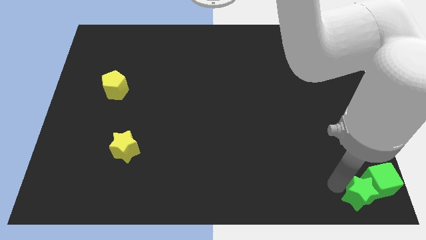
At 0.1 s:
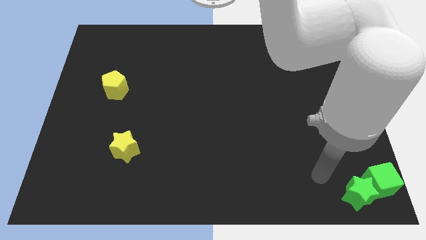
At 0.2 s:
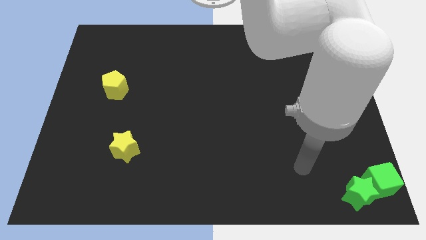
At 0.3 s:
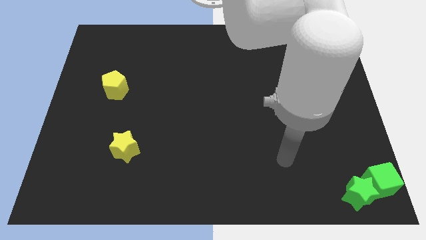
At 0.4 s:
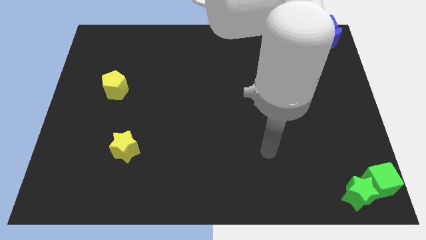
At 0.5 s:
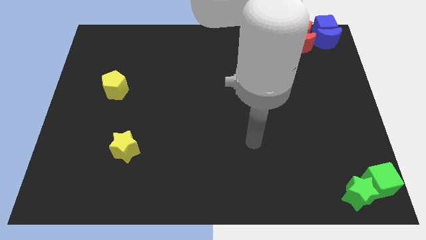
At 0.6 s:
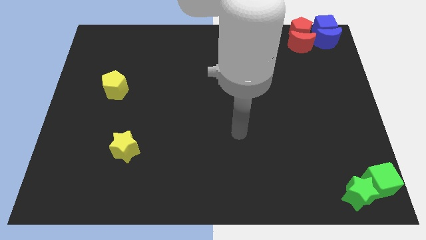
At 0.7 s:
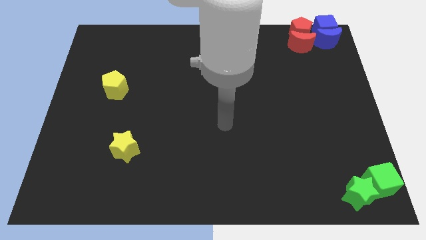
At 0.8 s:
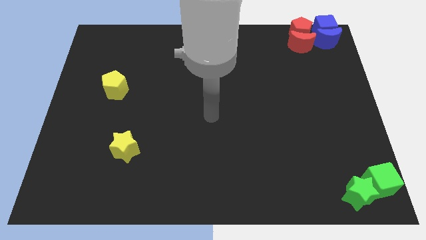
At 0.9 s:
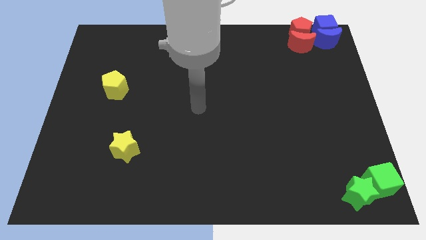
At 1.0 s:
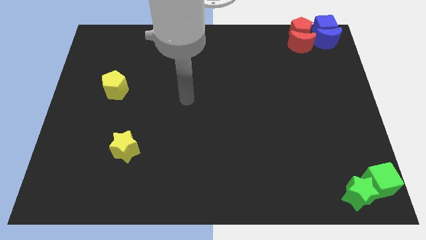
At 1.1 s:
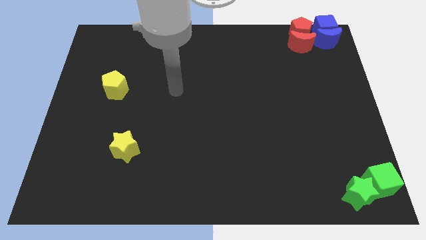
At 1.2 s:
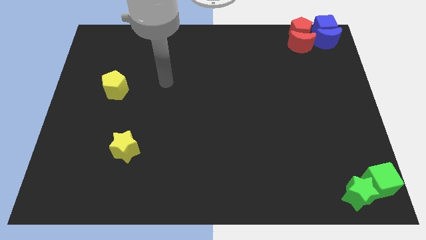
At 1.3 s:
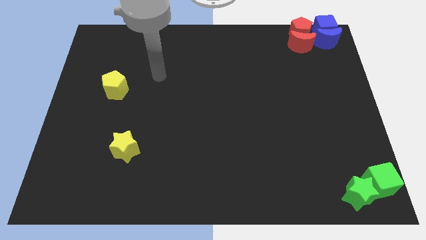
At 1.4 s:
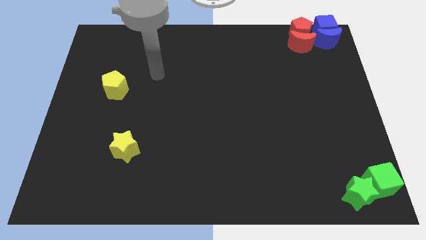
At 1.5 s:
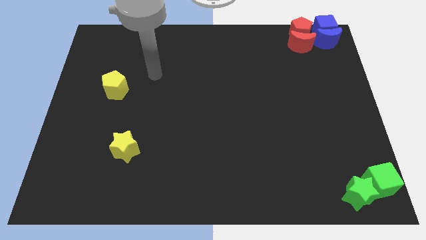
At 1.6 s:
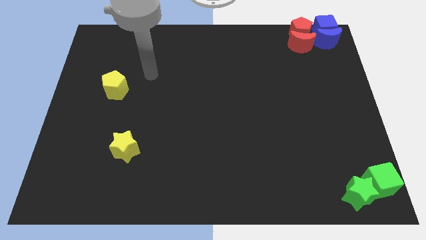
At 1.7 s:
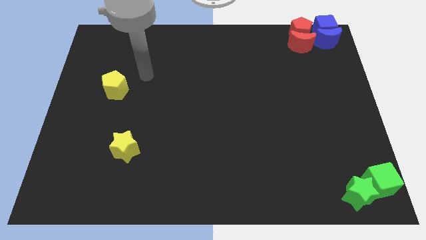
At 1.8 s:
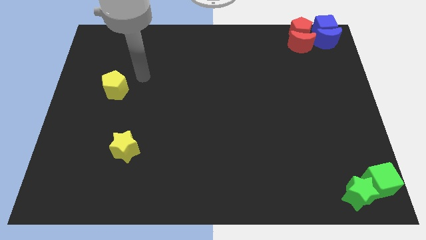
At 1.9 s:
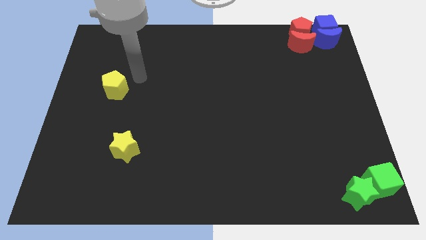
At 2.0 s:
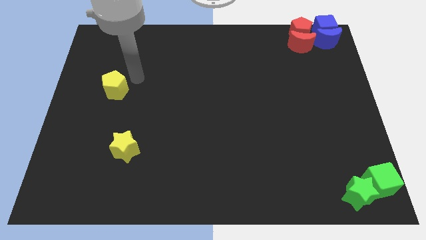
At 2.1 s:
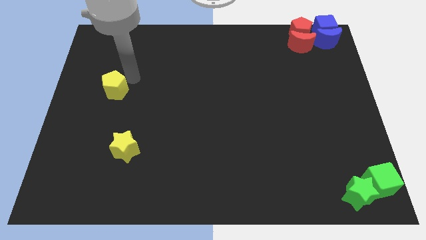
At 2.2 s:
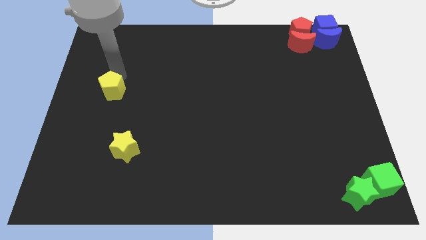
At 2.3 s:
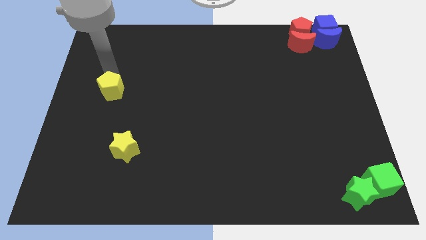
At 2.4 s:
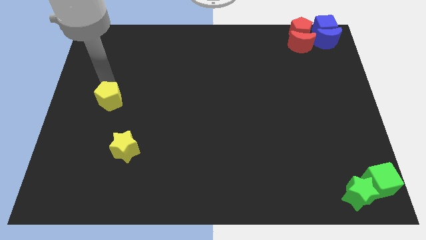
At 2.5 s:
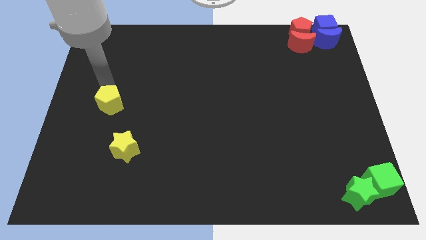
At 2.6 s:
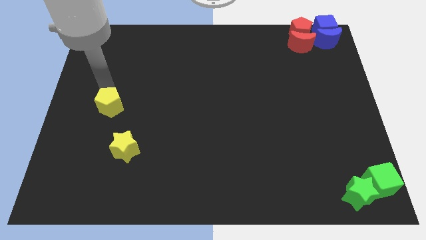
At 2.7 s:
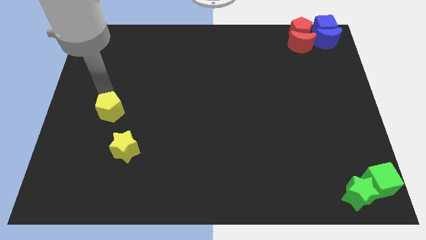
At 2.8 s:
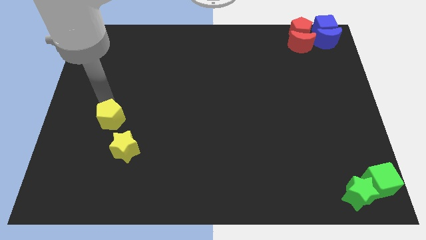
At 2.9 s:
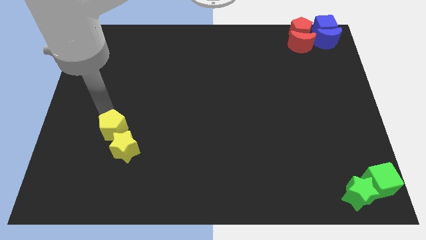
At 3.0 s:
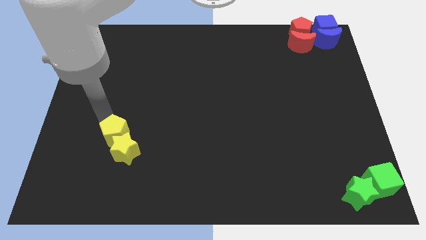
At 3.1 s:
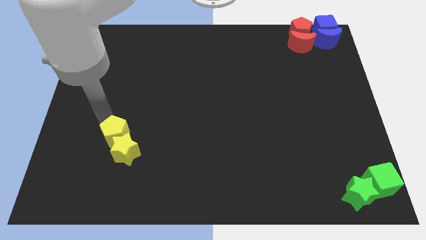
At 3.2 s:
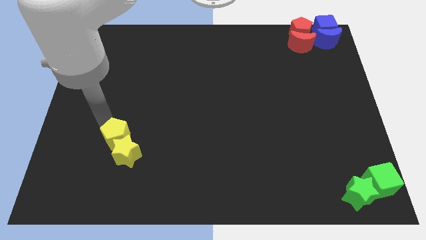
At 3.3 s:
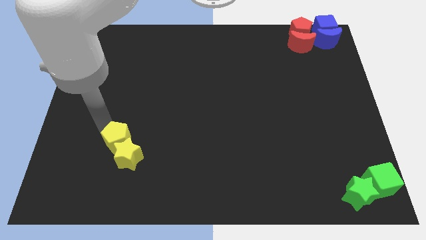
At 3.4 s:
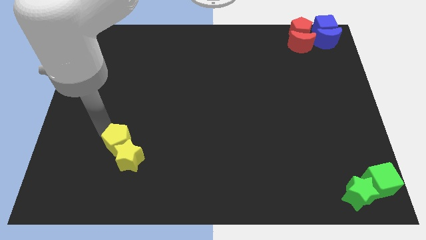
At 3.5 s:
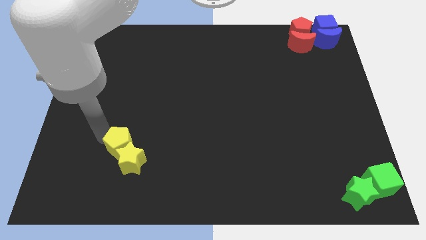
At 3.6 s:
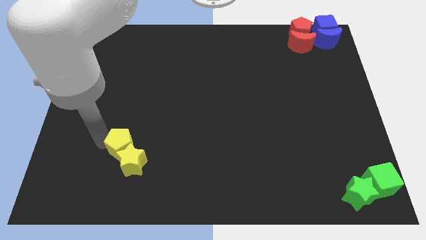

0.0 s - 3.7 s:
push yellow pentagon in to yellow star

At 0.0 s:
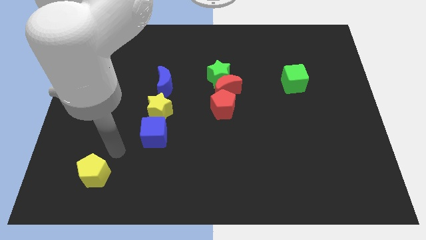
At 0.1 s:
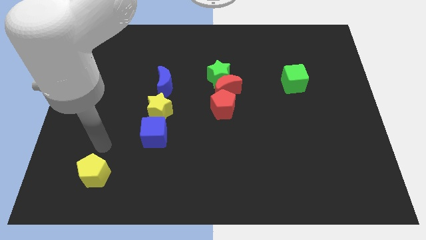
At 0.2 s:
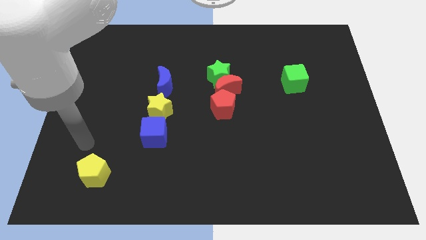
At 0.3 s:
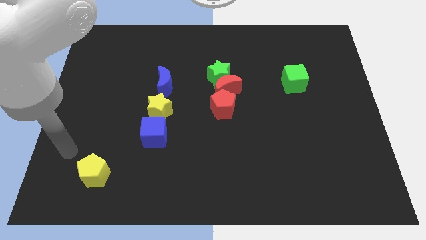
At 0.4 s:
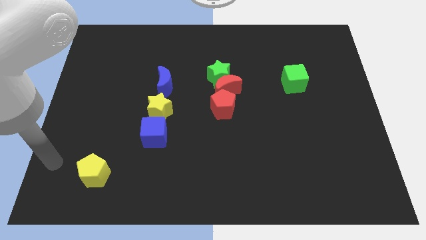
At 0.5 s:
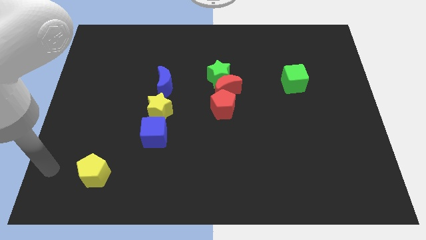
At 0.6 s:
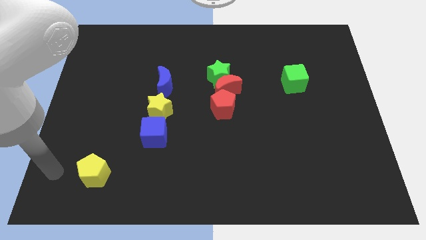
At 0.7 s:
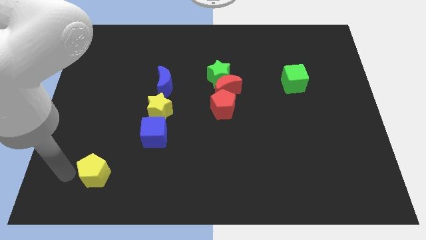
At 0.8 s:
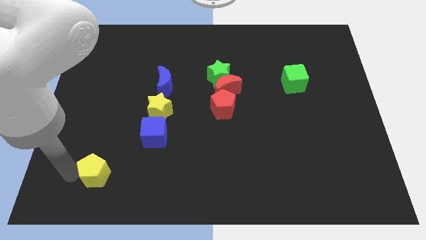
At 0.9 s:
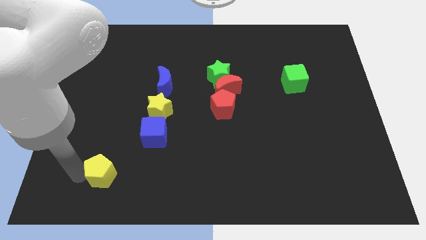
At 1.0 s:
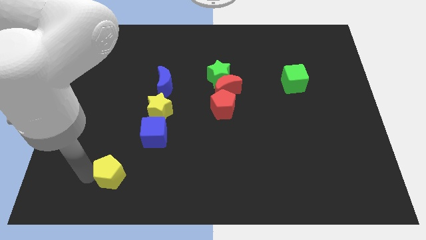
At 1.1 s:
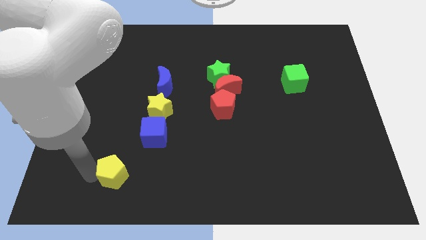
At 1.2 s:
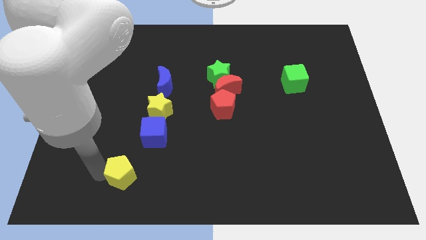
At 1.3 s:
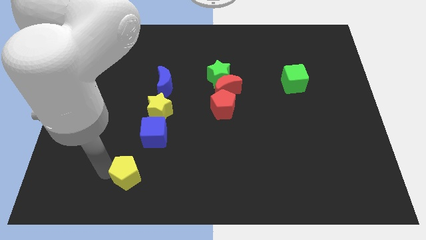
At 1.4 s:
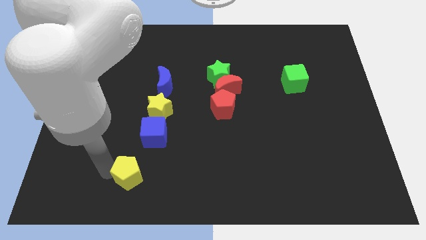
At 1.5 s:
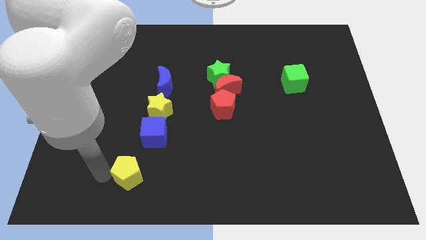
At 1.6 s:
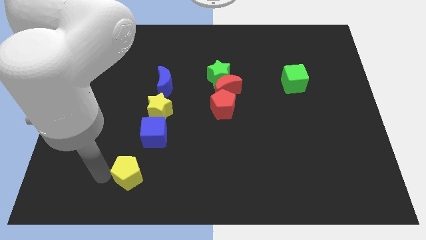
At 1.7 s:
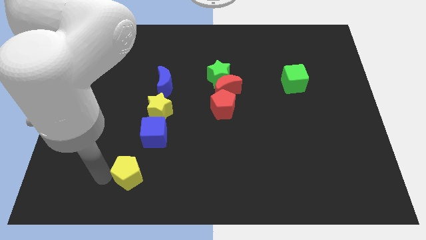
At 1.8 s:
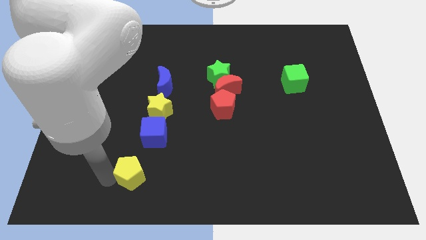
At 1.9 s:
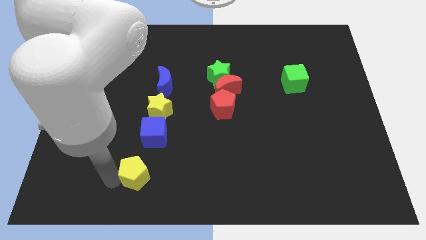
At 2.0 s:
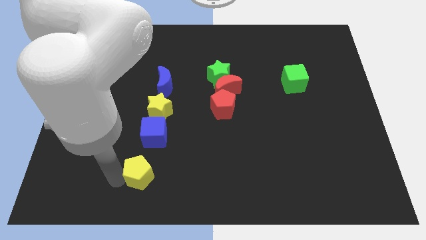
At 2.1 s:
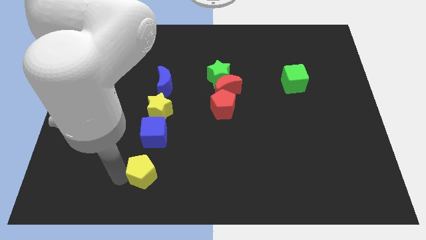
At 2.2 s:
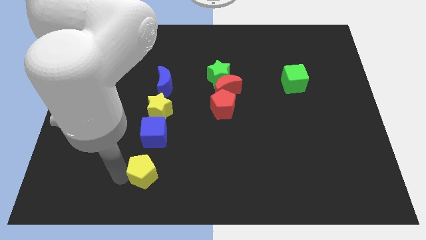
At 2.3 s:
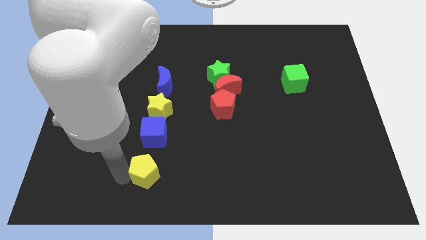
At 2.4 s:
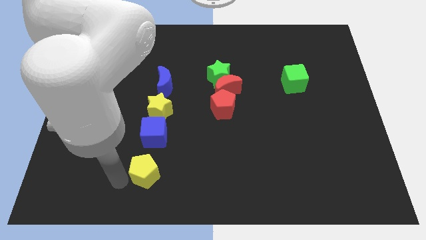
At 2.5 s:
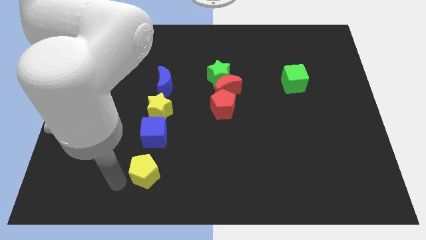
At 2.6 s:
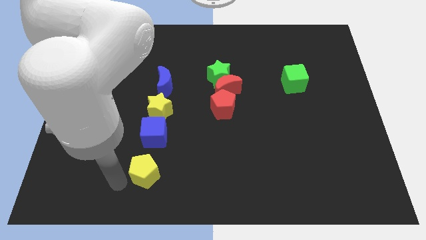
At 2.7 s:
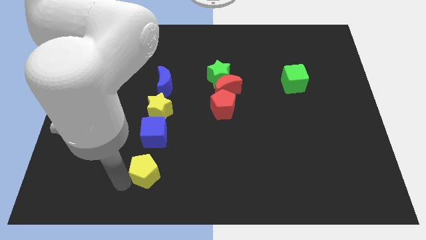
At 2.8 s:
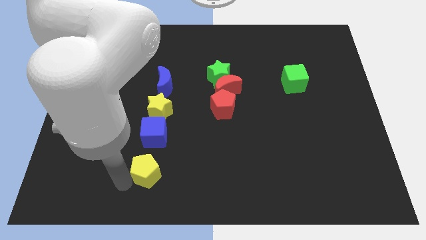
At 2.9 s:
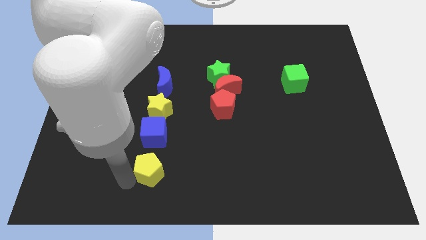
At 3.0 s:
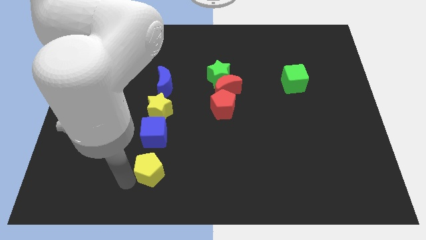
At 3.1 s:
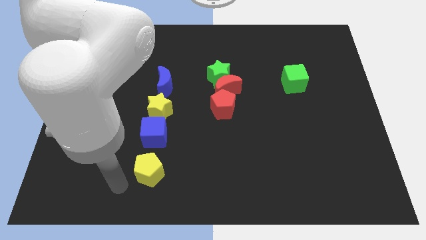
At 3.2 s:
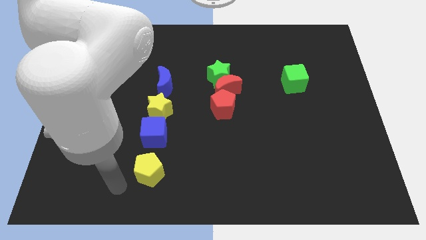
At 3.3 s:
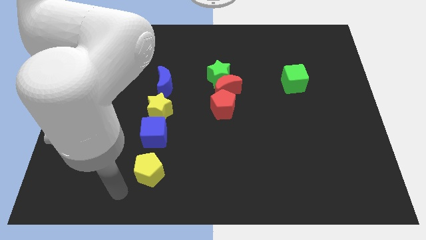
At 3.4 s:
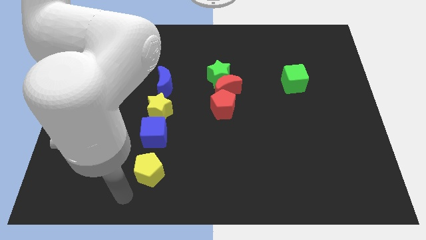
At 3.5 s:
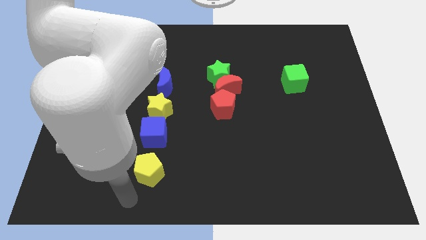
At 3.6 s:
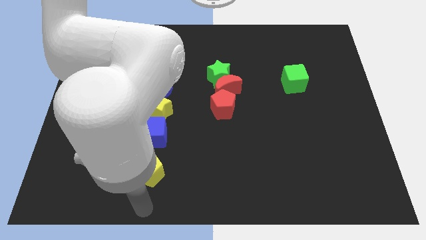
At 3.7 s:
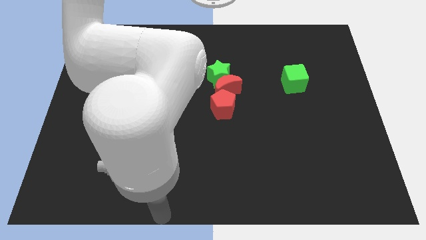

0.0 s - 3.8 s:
place yellow pentagon to the bottom of blue cube

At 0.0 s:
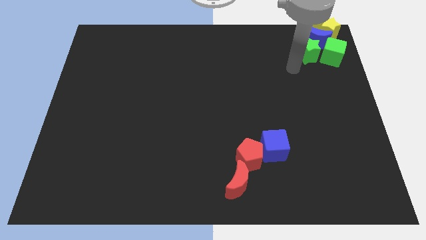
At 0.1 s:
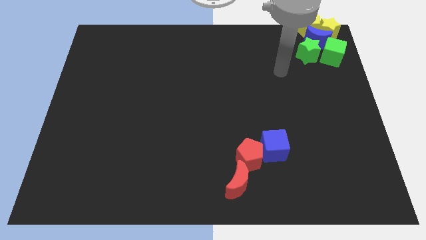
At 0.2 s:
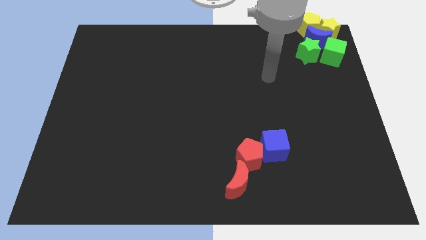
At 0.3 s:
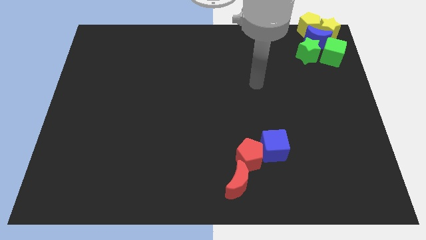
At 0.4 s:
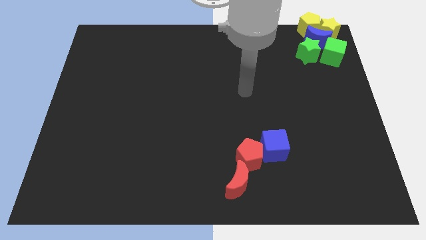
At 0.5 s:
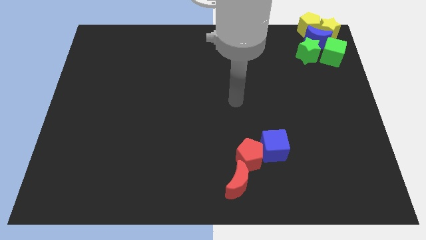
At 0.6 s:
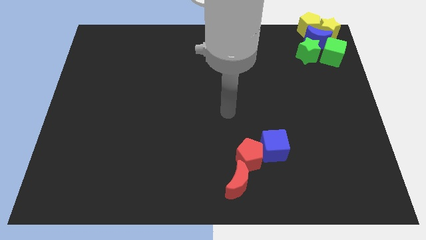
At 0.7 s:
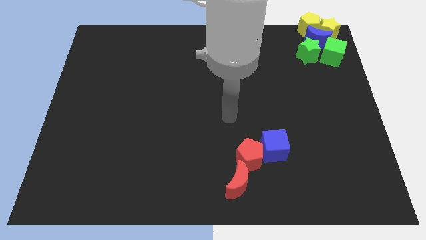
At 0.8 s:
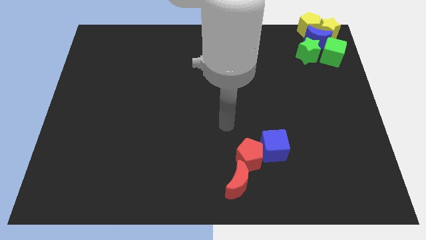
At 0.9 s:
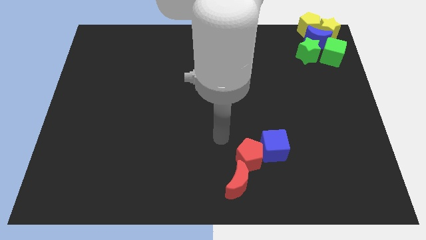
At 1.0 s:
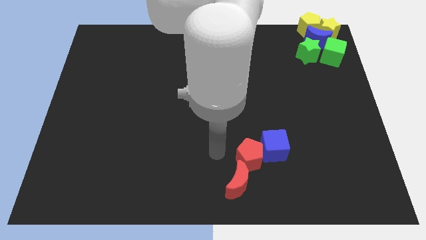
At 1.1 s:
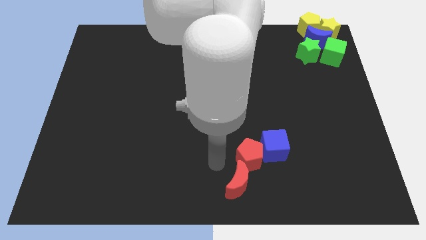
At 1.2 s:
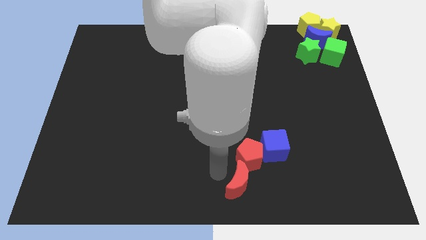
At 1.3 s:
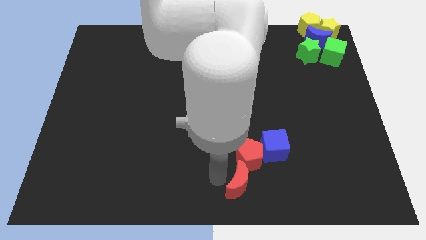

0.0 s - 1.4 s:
point your arm at the left side of the red crescent
